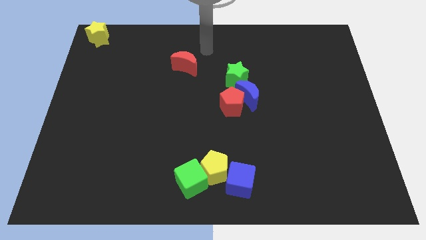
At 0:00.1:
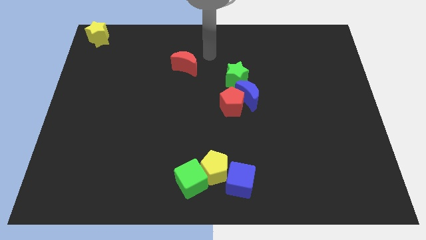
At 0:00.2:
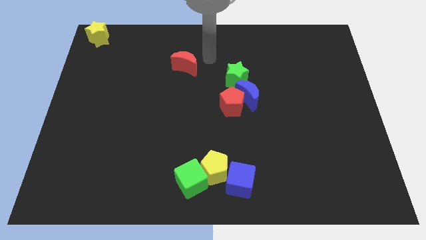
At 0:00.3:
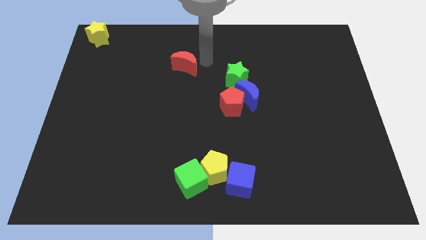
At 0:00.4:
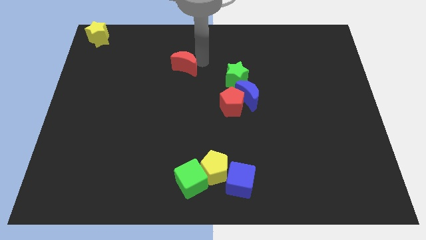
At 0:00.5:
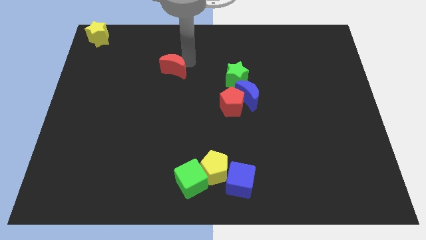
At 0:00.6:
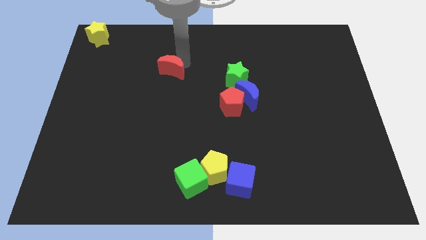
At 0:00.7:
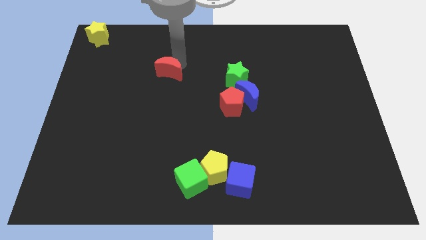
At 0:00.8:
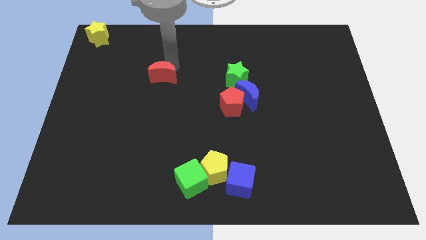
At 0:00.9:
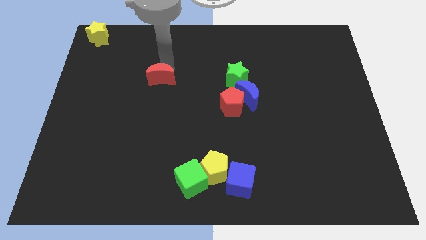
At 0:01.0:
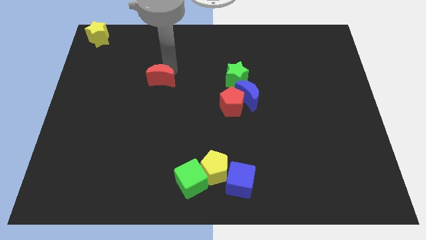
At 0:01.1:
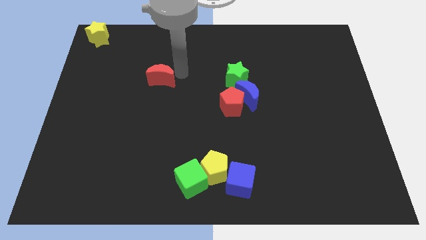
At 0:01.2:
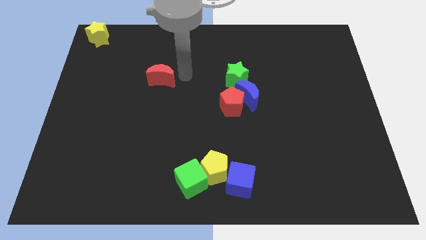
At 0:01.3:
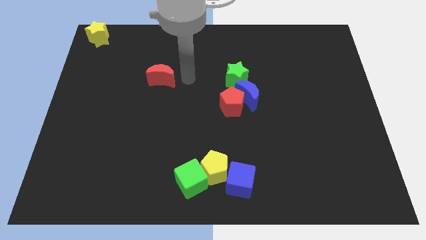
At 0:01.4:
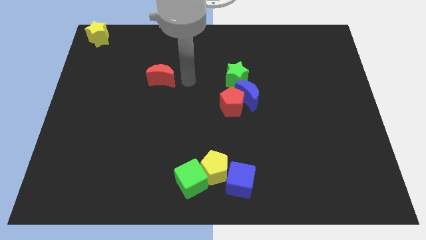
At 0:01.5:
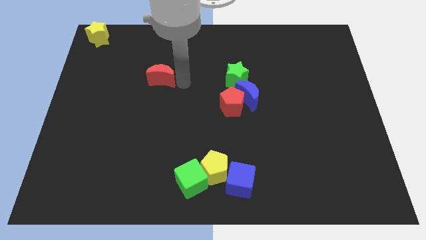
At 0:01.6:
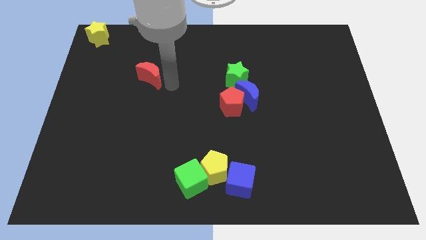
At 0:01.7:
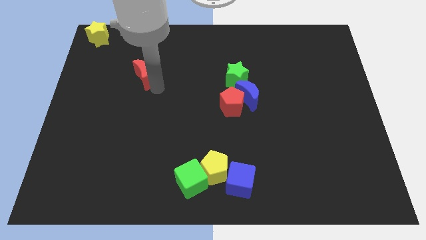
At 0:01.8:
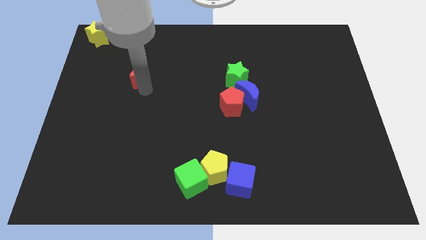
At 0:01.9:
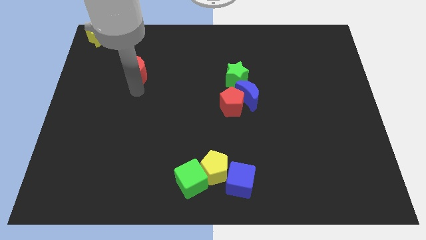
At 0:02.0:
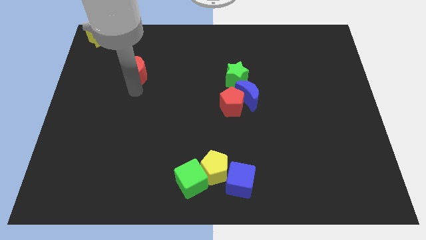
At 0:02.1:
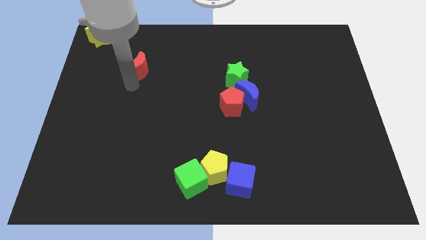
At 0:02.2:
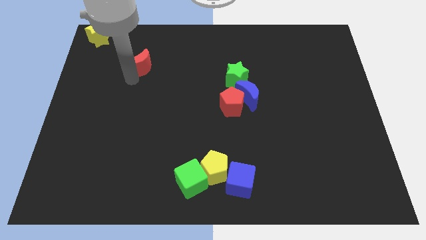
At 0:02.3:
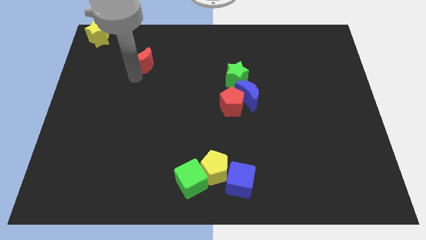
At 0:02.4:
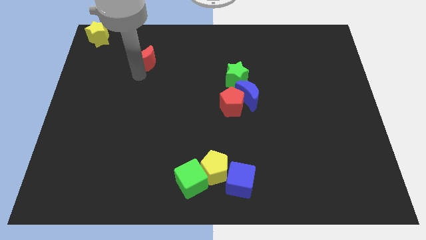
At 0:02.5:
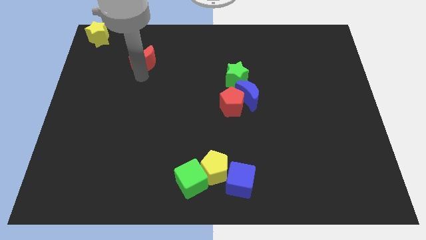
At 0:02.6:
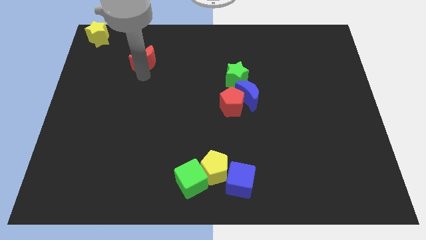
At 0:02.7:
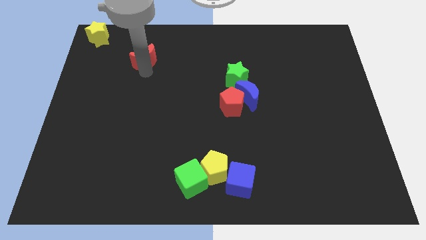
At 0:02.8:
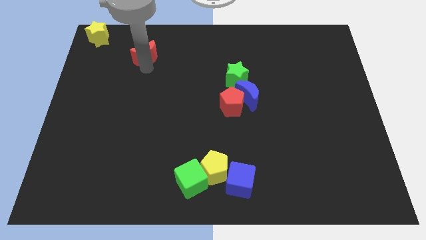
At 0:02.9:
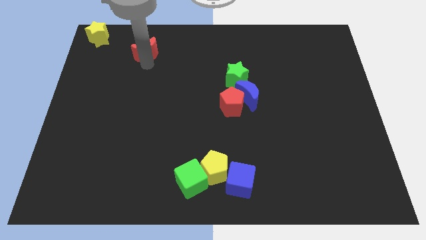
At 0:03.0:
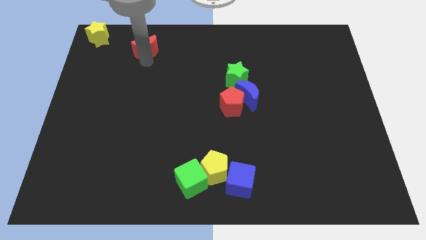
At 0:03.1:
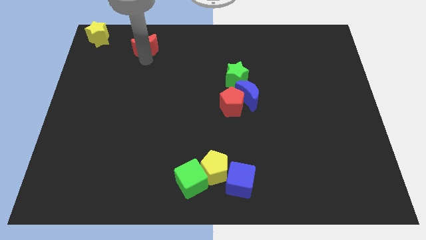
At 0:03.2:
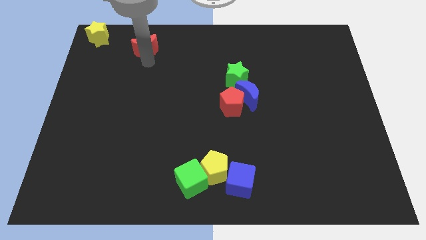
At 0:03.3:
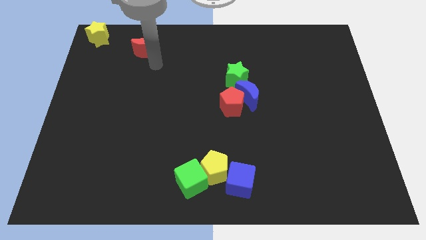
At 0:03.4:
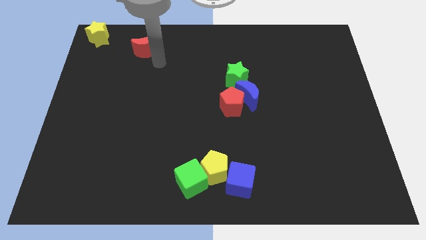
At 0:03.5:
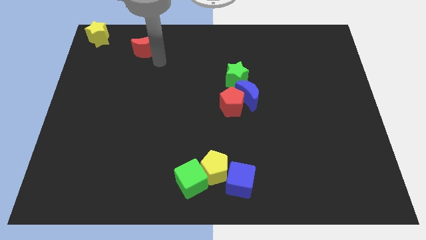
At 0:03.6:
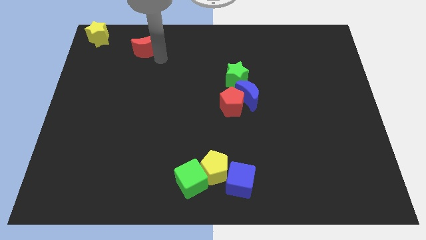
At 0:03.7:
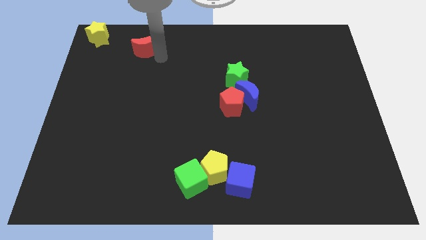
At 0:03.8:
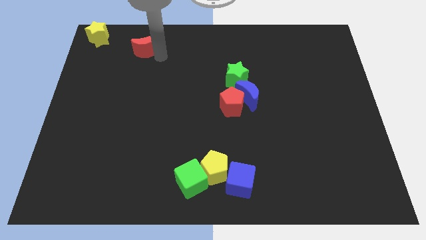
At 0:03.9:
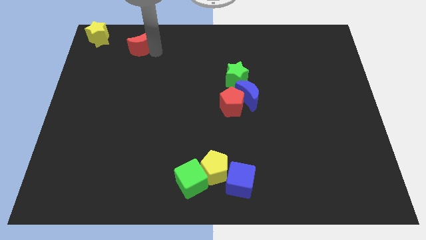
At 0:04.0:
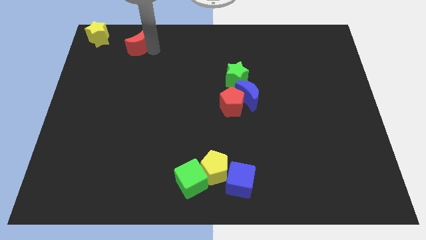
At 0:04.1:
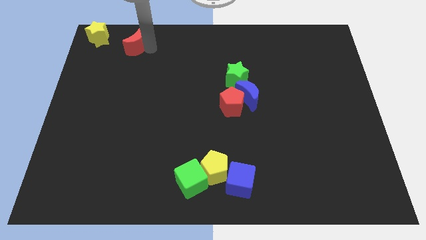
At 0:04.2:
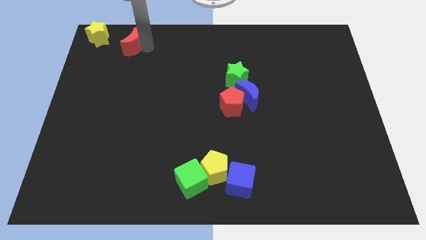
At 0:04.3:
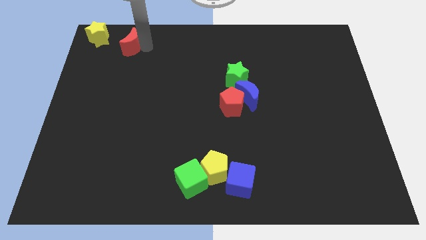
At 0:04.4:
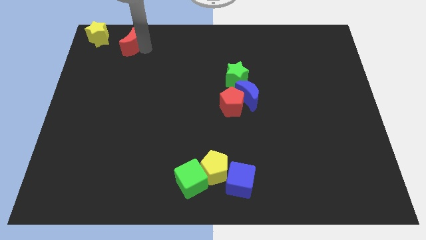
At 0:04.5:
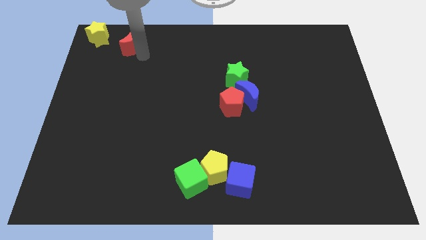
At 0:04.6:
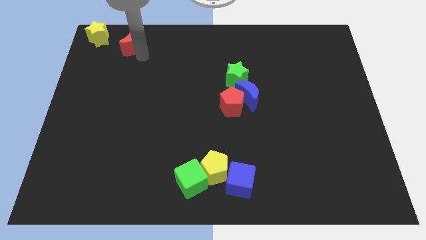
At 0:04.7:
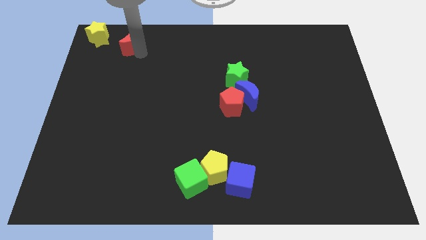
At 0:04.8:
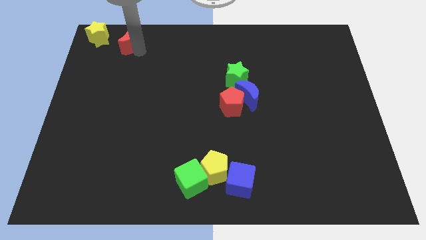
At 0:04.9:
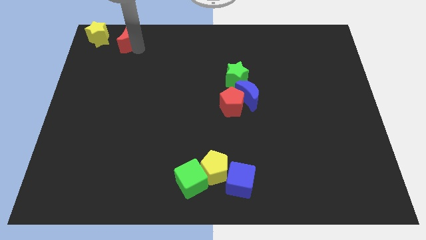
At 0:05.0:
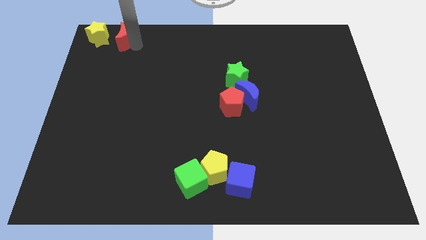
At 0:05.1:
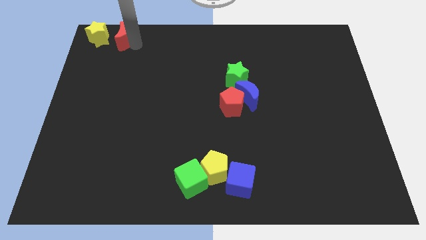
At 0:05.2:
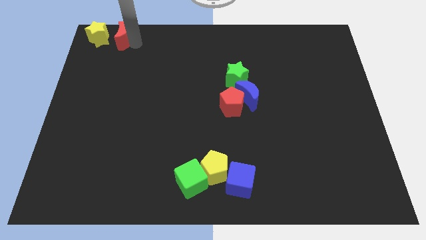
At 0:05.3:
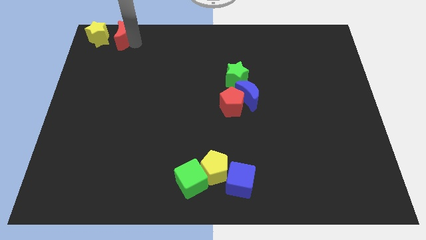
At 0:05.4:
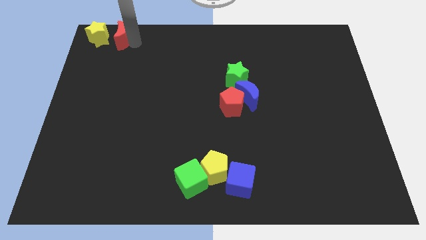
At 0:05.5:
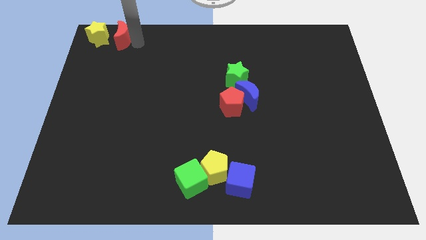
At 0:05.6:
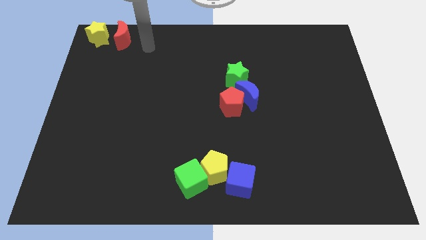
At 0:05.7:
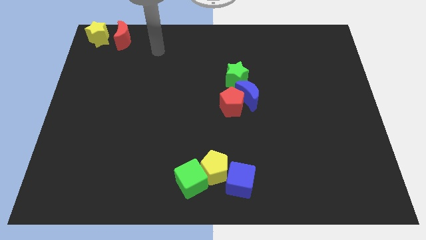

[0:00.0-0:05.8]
move the red moon to the right side of the yellow pentagon

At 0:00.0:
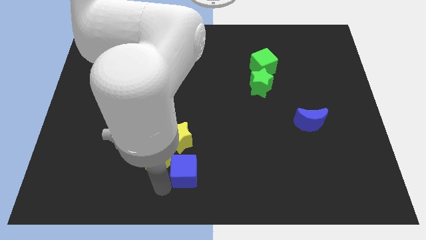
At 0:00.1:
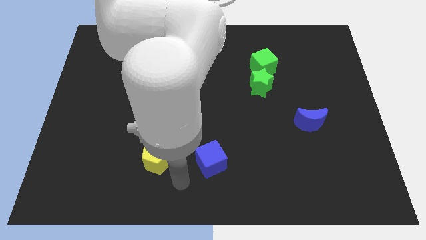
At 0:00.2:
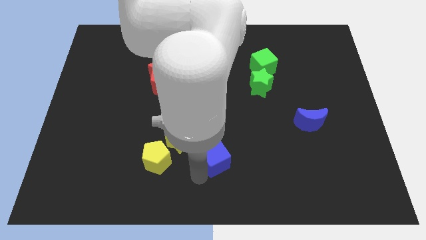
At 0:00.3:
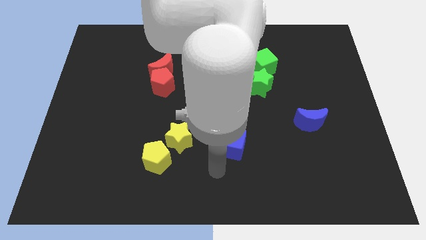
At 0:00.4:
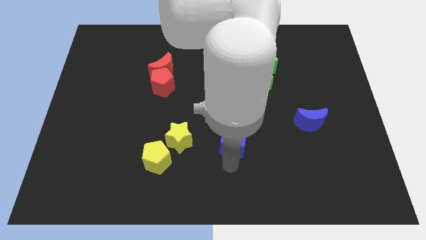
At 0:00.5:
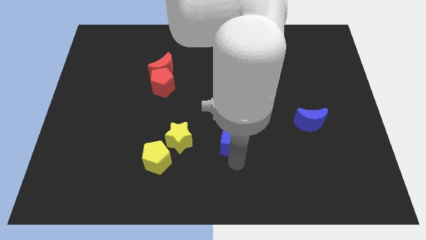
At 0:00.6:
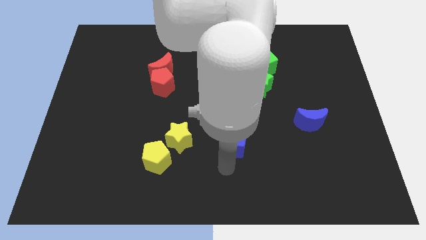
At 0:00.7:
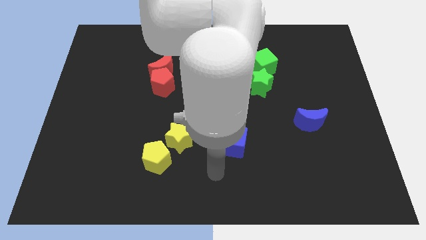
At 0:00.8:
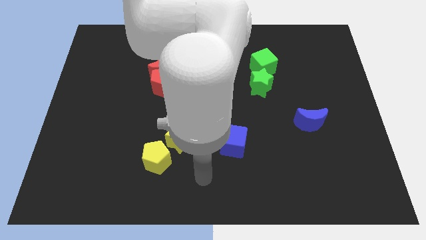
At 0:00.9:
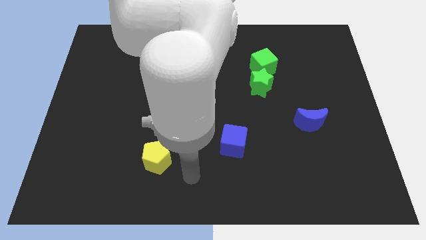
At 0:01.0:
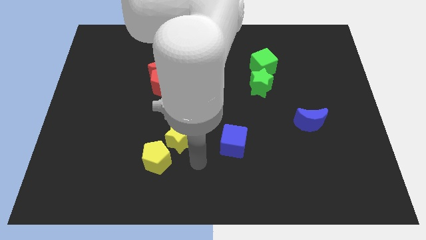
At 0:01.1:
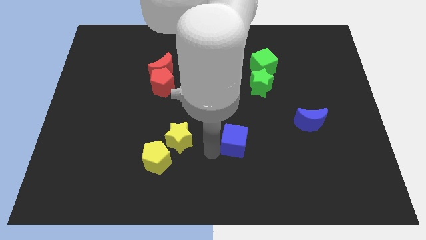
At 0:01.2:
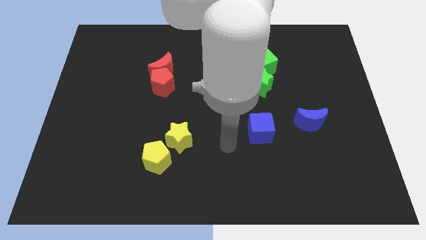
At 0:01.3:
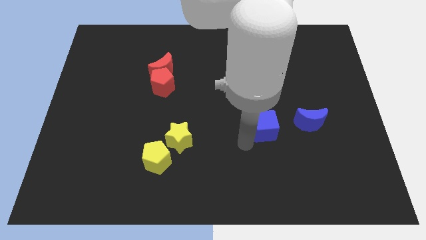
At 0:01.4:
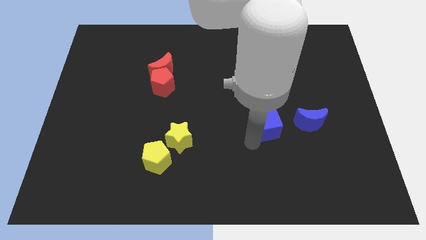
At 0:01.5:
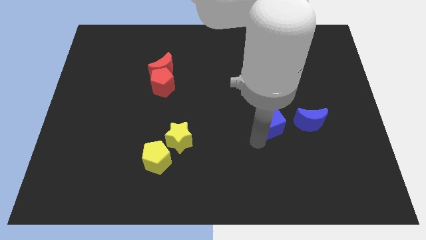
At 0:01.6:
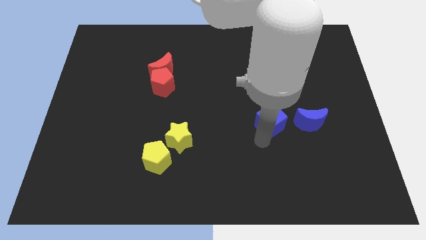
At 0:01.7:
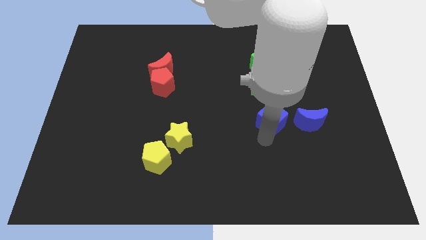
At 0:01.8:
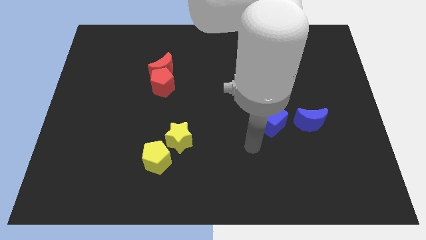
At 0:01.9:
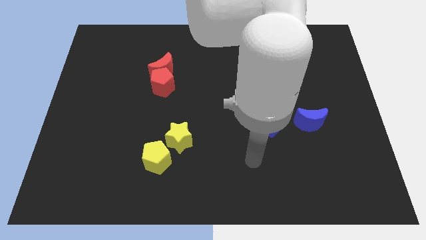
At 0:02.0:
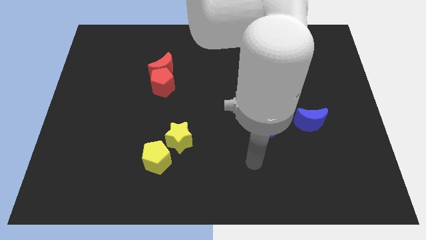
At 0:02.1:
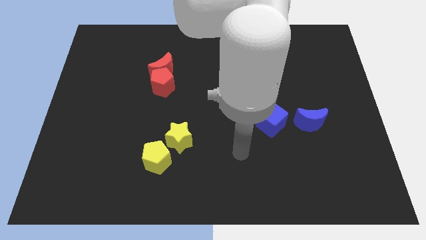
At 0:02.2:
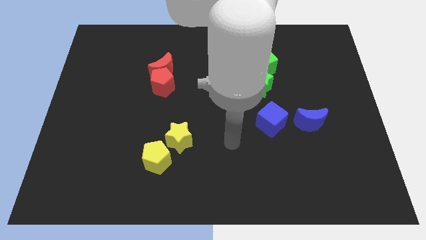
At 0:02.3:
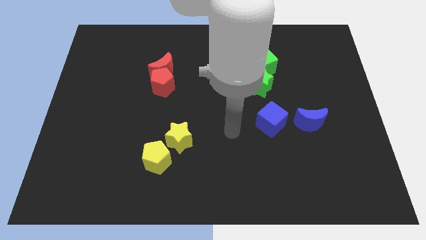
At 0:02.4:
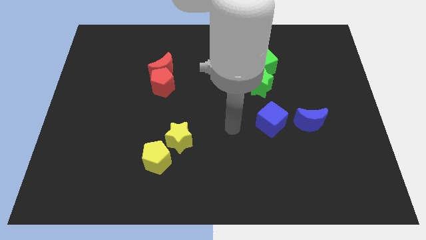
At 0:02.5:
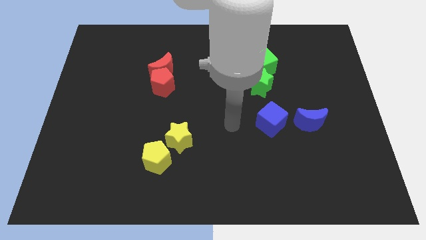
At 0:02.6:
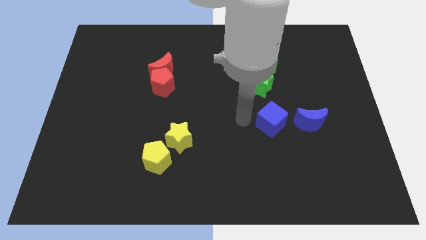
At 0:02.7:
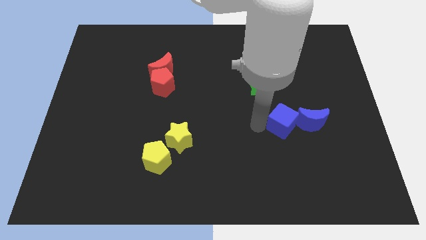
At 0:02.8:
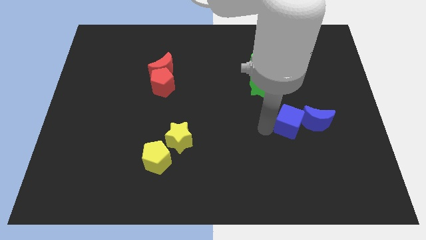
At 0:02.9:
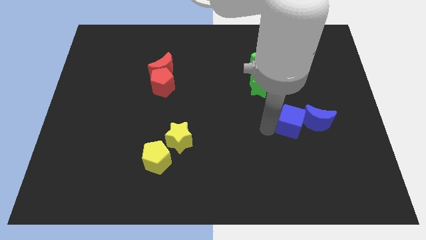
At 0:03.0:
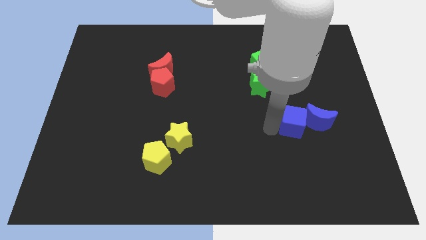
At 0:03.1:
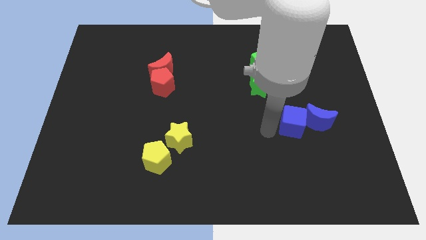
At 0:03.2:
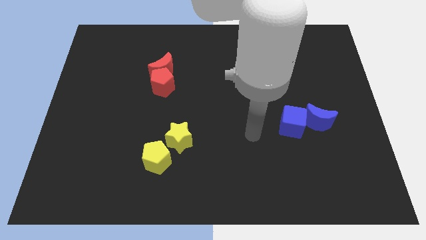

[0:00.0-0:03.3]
place the blue cube to the left of the blue moon
